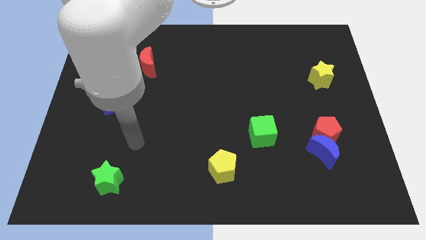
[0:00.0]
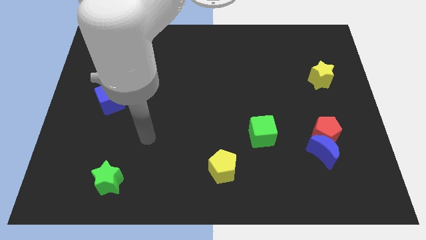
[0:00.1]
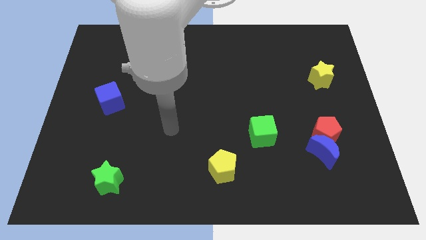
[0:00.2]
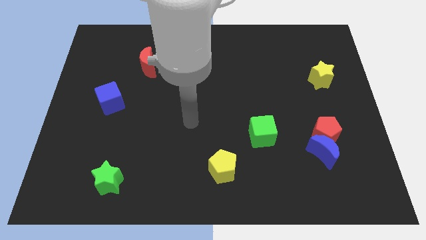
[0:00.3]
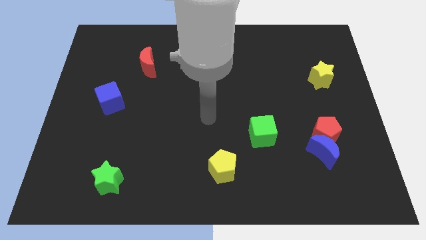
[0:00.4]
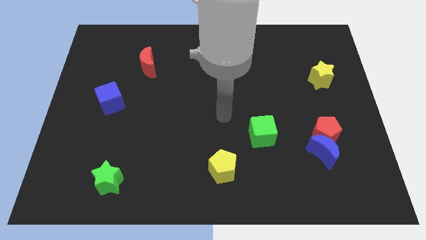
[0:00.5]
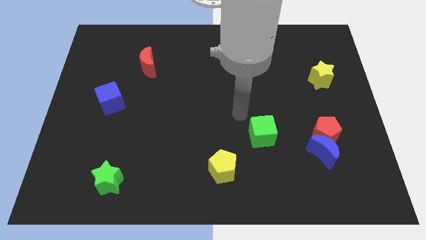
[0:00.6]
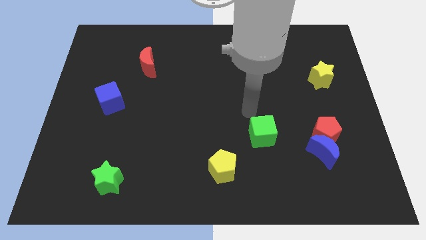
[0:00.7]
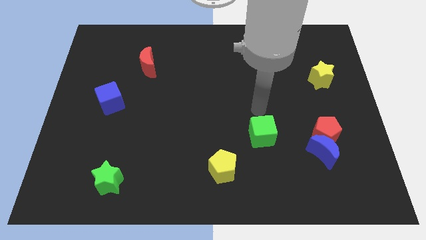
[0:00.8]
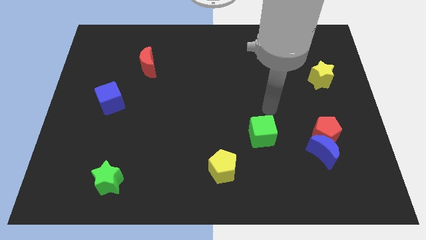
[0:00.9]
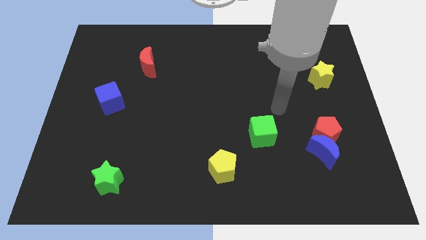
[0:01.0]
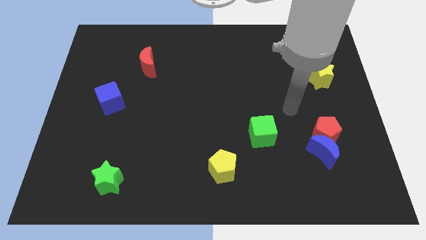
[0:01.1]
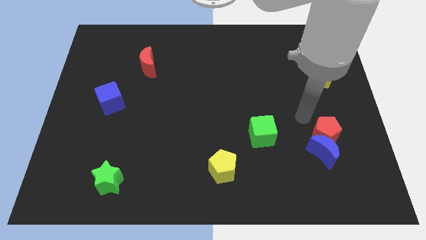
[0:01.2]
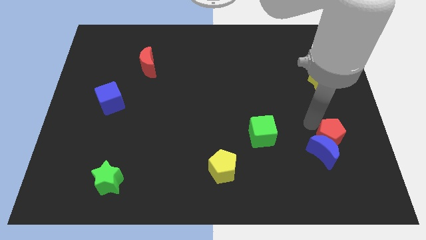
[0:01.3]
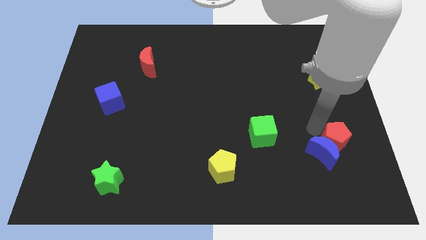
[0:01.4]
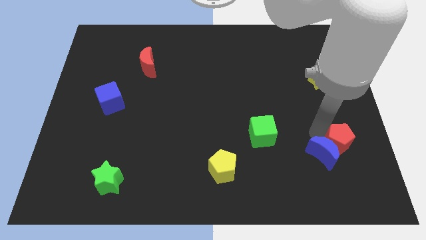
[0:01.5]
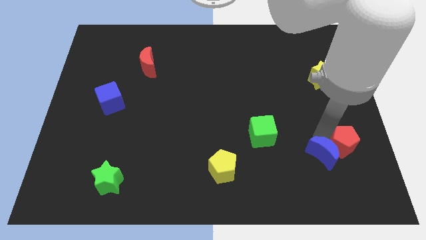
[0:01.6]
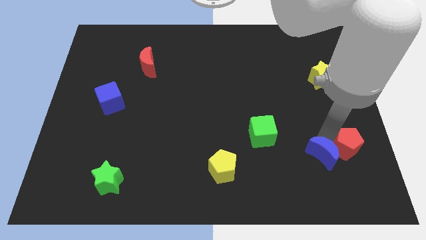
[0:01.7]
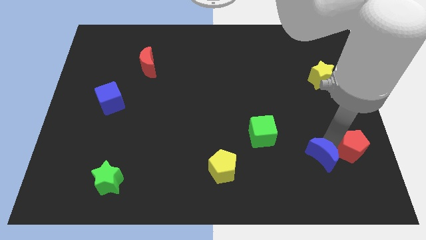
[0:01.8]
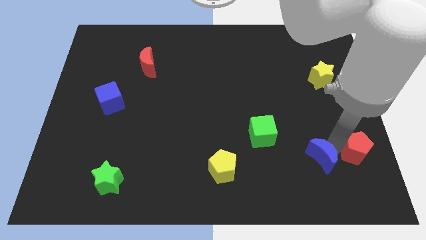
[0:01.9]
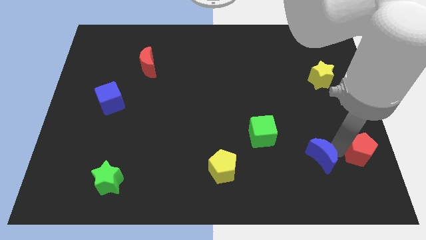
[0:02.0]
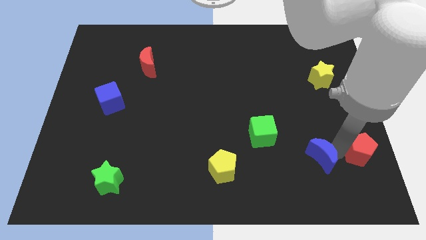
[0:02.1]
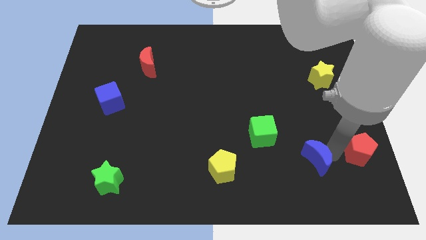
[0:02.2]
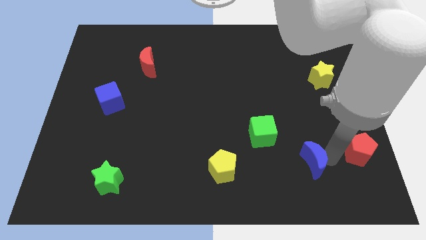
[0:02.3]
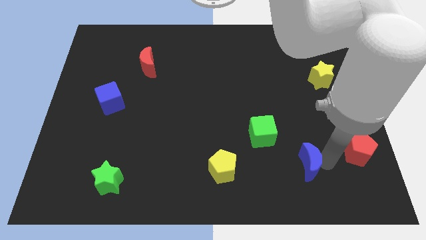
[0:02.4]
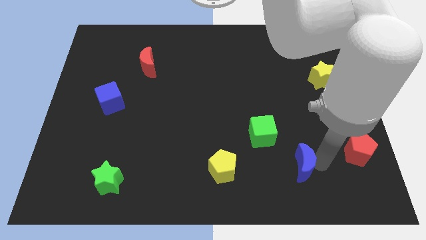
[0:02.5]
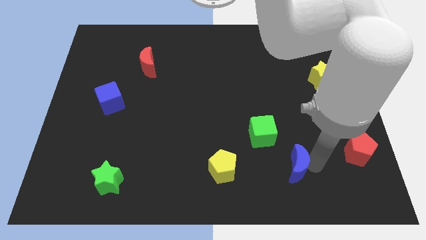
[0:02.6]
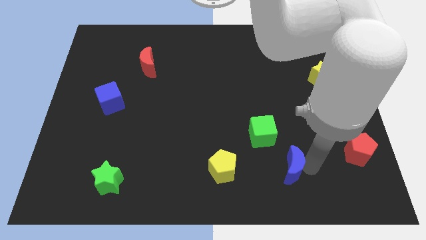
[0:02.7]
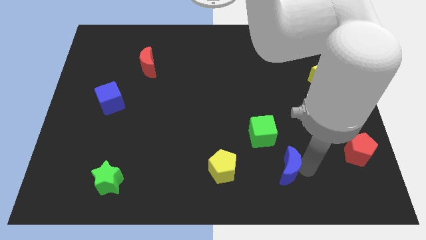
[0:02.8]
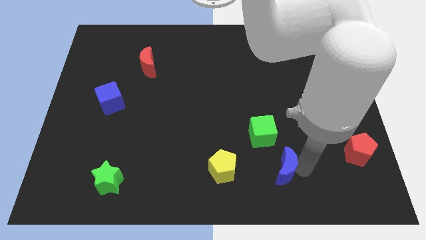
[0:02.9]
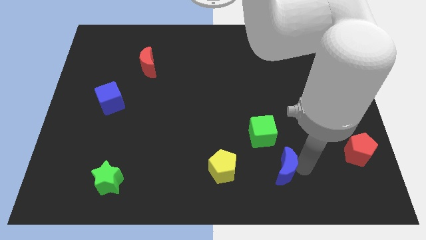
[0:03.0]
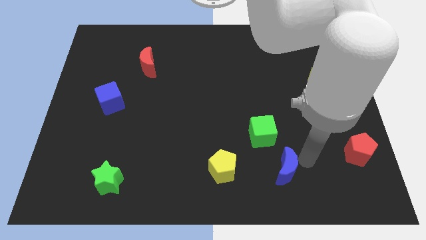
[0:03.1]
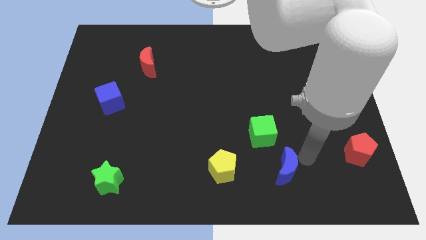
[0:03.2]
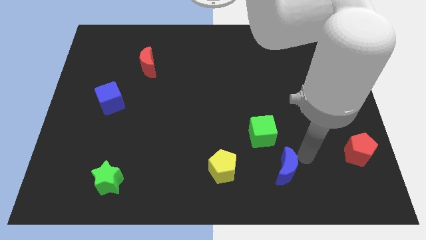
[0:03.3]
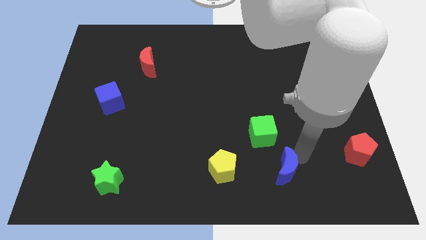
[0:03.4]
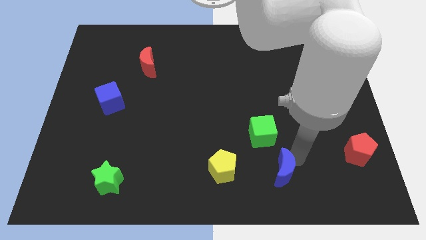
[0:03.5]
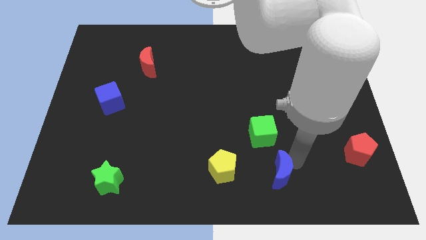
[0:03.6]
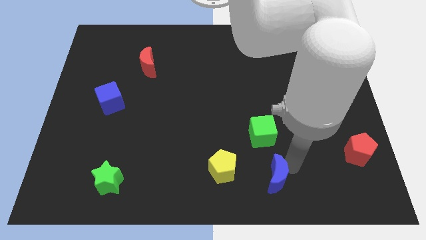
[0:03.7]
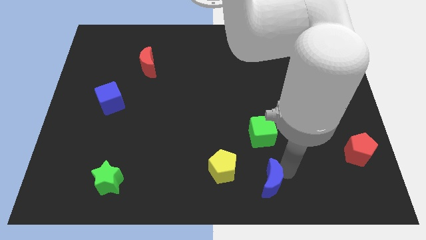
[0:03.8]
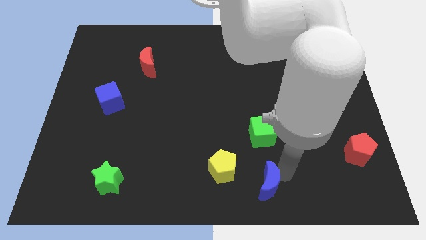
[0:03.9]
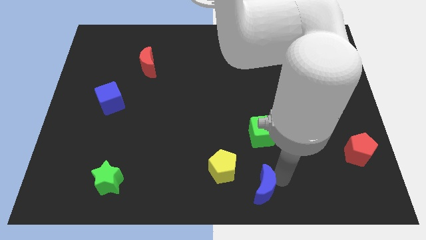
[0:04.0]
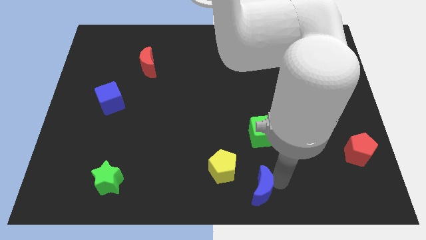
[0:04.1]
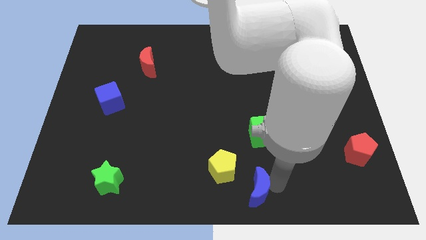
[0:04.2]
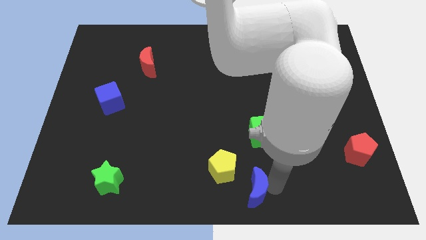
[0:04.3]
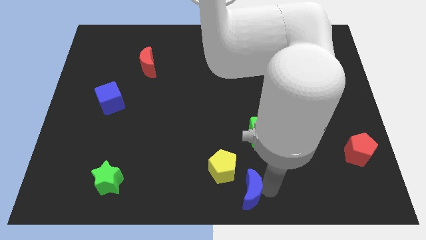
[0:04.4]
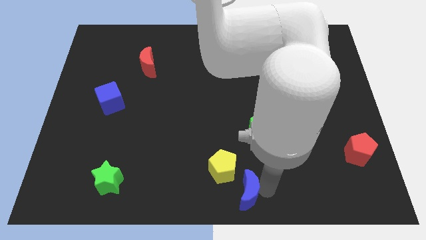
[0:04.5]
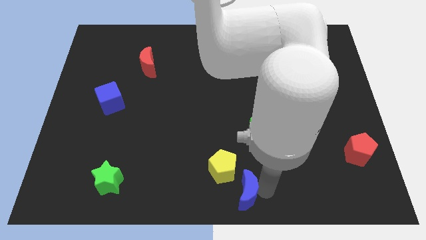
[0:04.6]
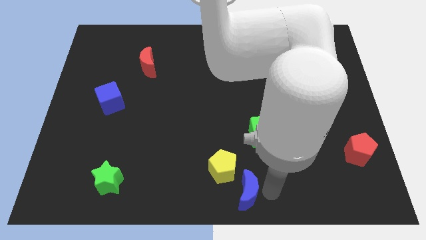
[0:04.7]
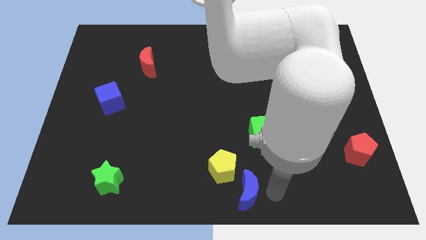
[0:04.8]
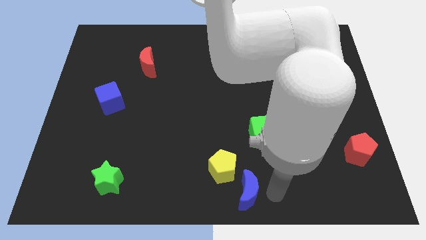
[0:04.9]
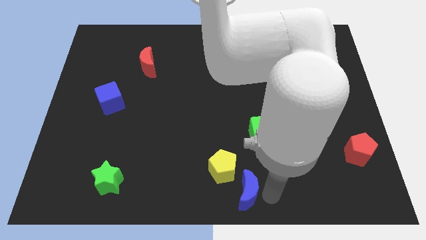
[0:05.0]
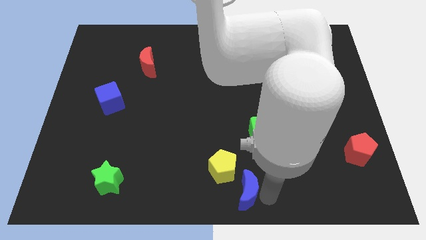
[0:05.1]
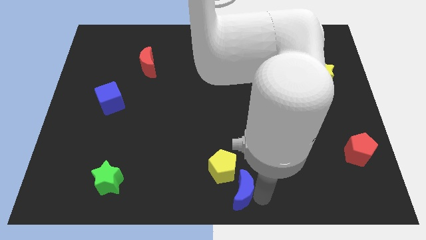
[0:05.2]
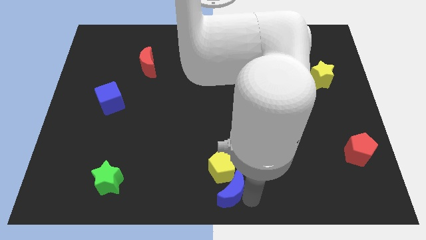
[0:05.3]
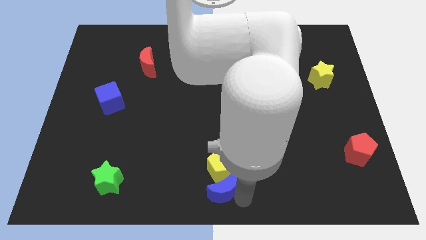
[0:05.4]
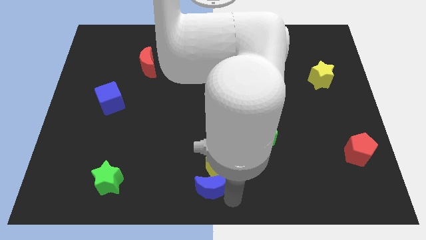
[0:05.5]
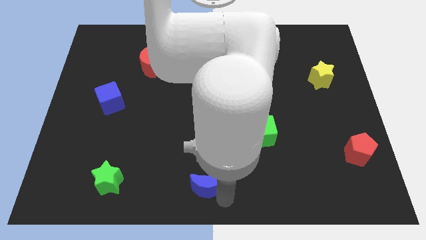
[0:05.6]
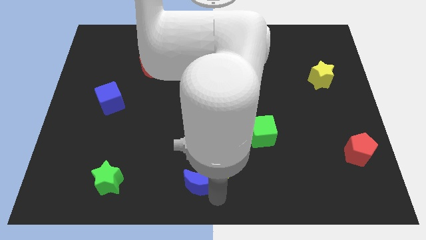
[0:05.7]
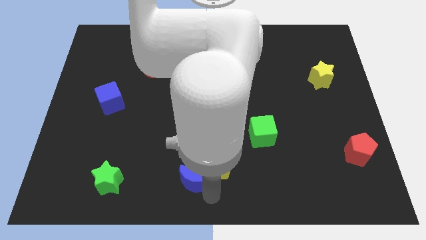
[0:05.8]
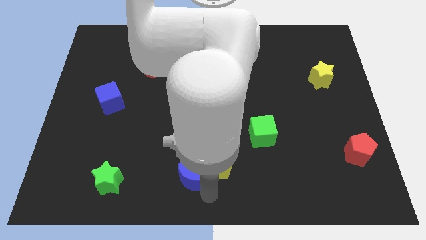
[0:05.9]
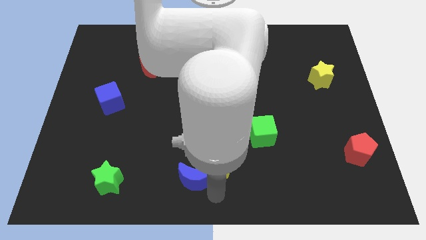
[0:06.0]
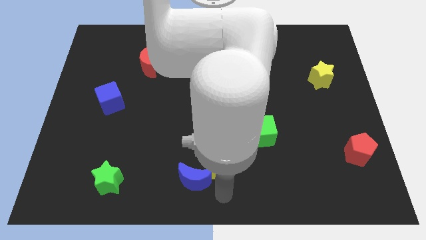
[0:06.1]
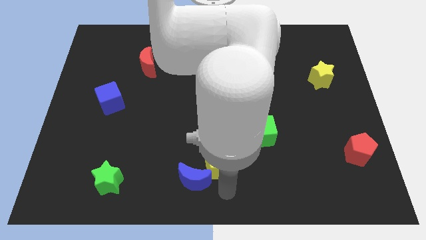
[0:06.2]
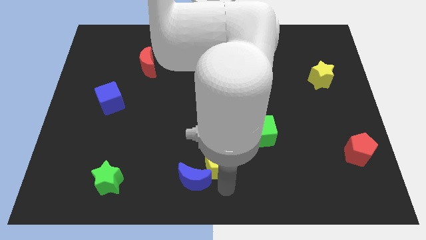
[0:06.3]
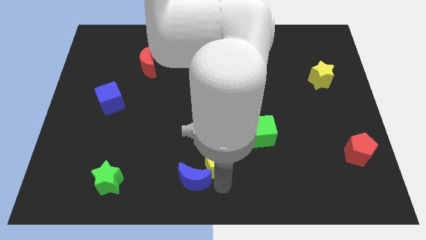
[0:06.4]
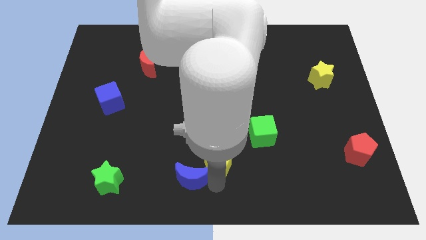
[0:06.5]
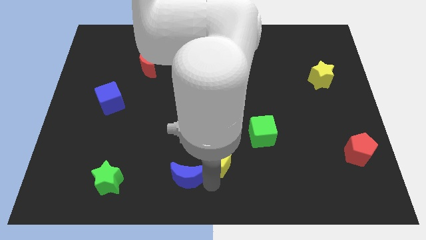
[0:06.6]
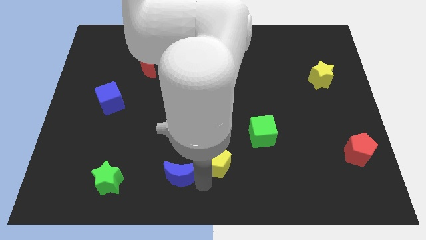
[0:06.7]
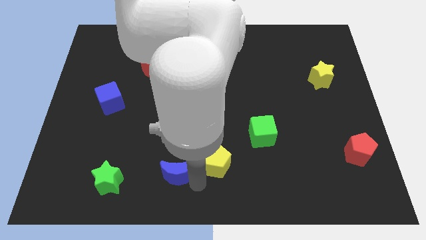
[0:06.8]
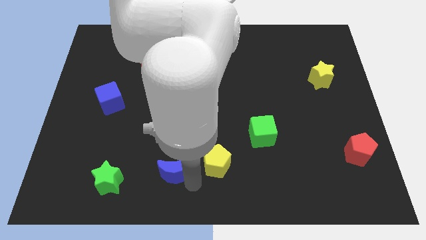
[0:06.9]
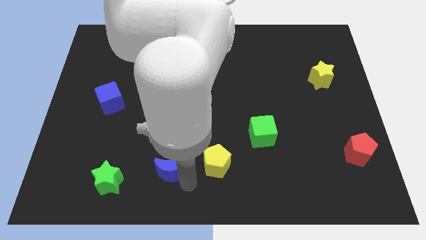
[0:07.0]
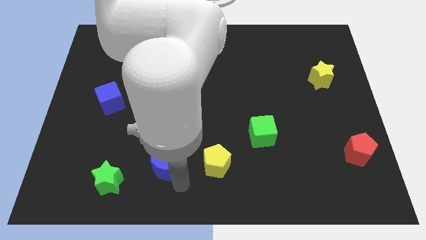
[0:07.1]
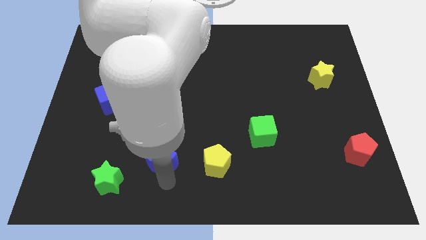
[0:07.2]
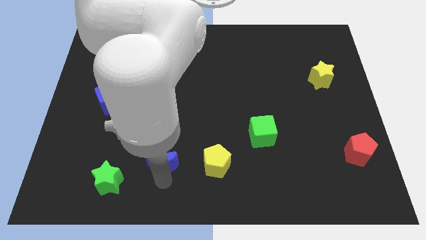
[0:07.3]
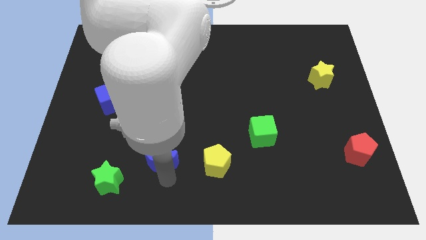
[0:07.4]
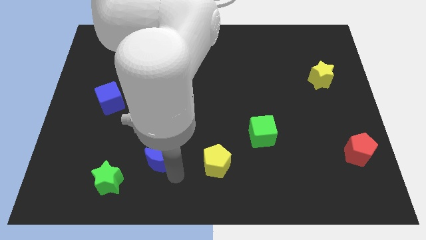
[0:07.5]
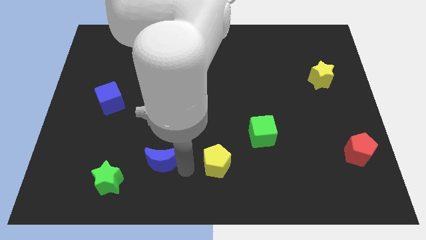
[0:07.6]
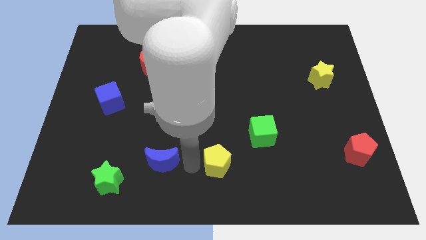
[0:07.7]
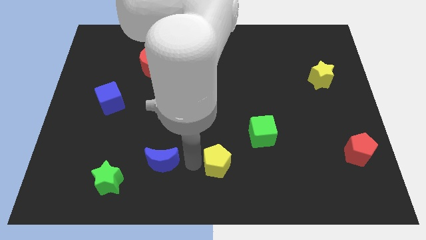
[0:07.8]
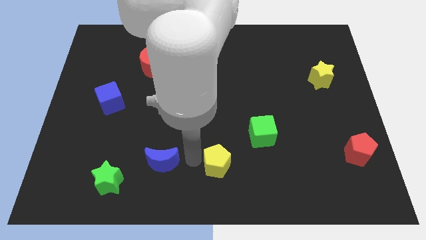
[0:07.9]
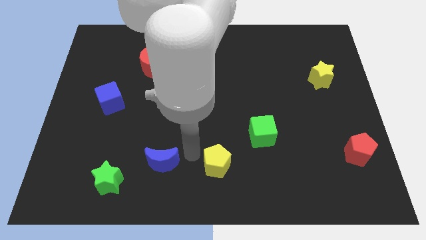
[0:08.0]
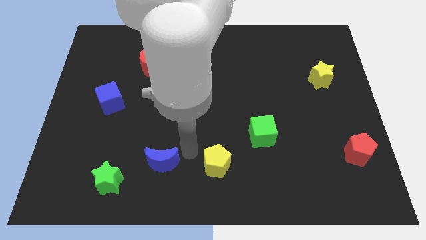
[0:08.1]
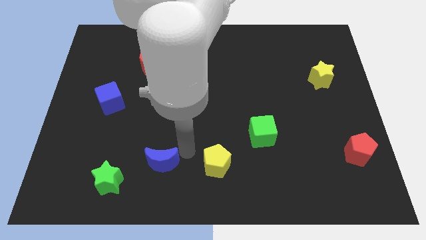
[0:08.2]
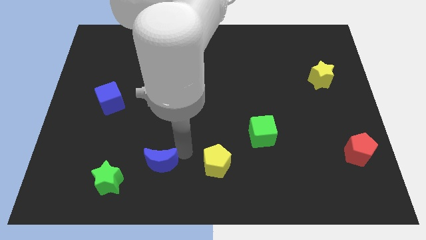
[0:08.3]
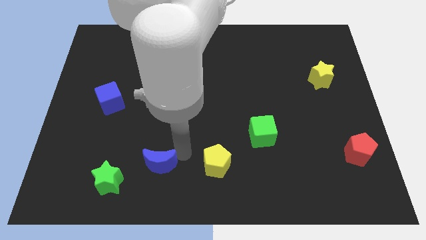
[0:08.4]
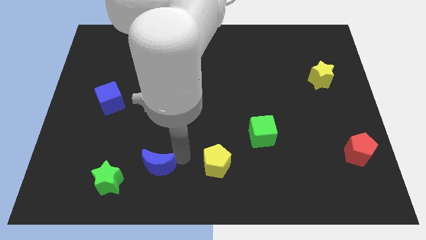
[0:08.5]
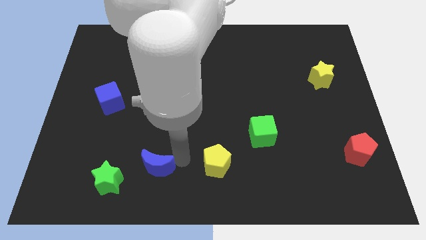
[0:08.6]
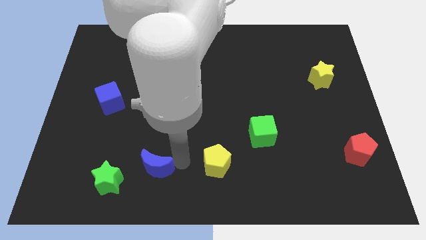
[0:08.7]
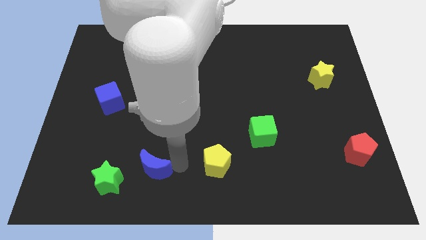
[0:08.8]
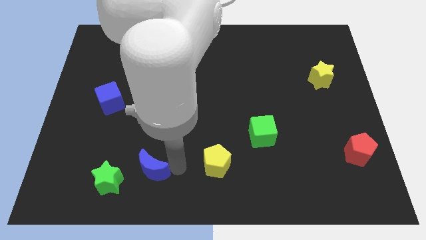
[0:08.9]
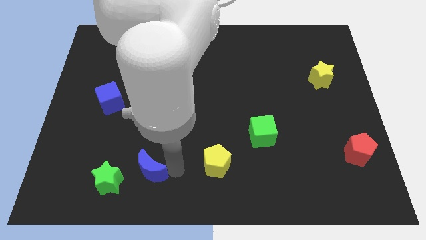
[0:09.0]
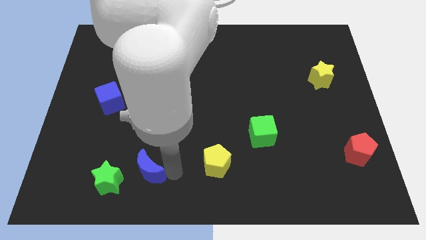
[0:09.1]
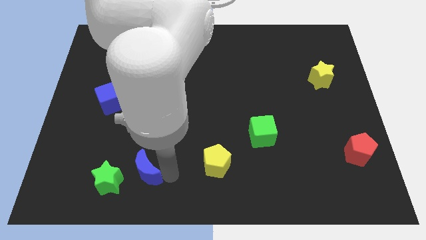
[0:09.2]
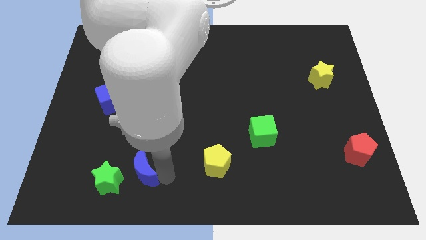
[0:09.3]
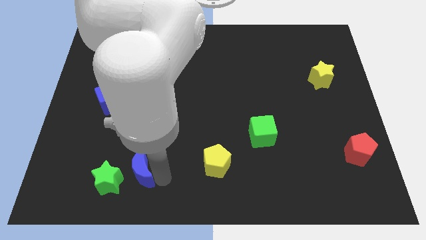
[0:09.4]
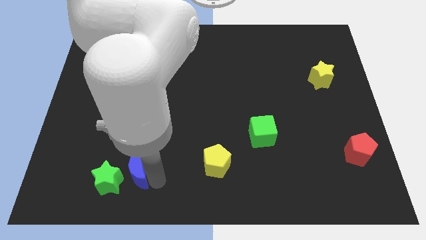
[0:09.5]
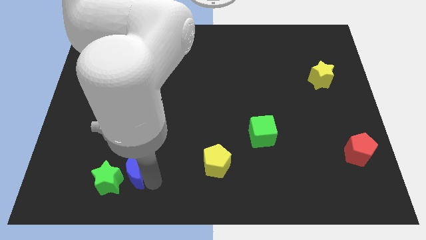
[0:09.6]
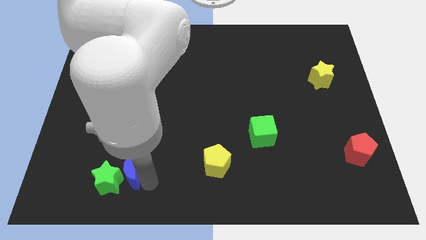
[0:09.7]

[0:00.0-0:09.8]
push the blue moon to the green star
